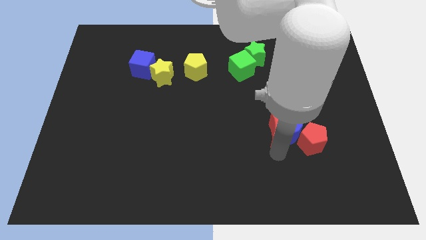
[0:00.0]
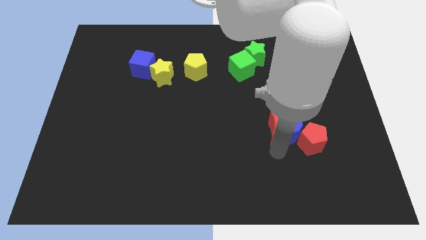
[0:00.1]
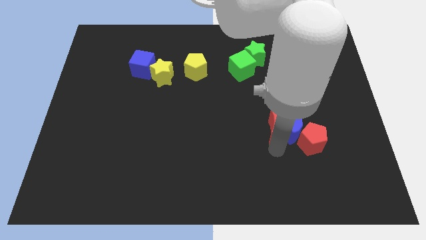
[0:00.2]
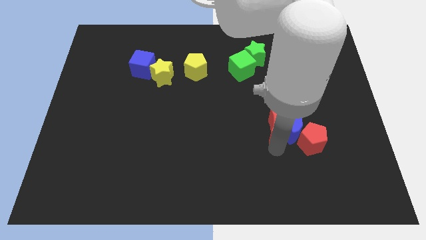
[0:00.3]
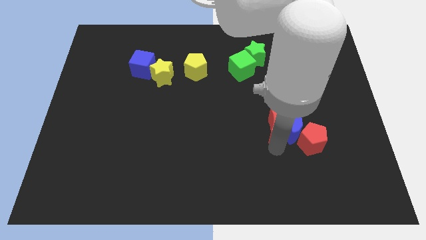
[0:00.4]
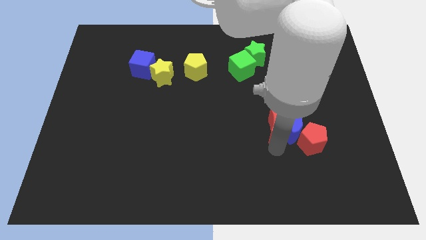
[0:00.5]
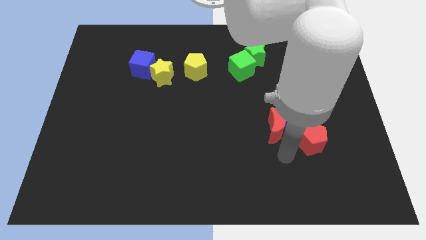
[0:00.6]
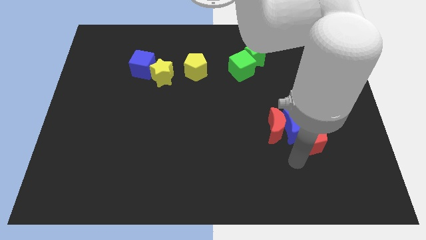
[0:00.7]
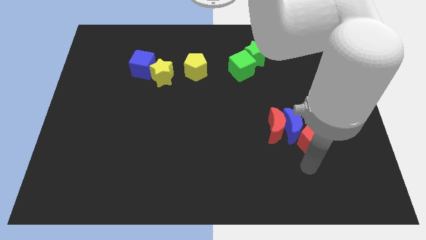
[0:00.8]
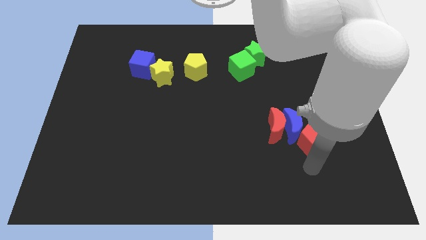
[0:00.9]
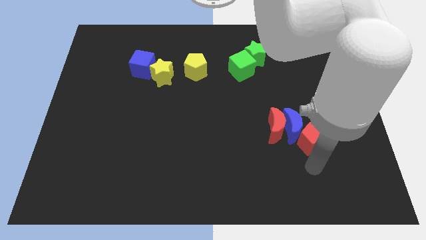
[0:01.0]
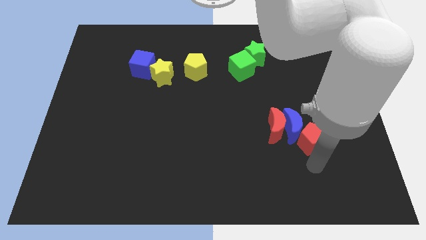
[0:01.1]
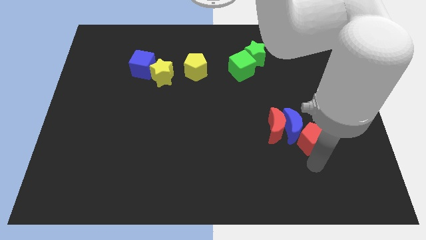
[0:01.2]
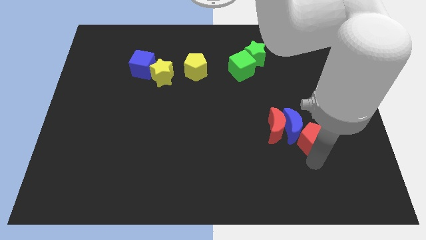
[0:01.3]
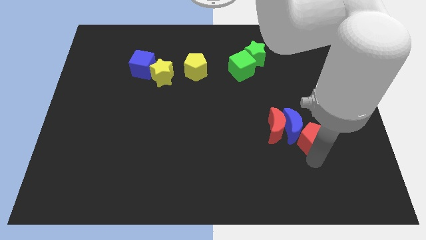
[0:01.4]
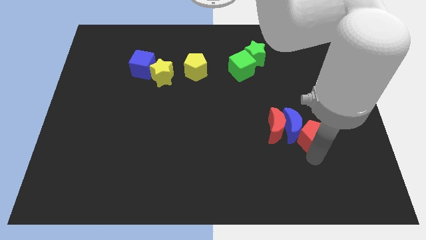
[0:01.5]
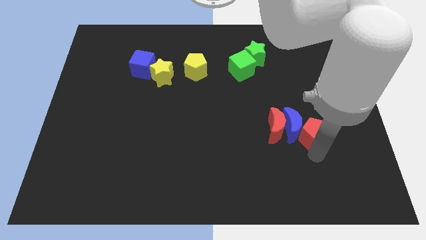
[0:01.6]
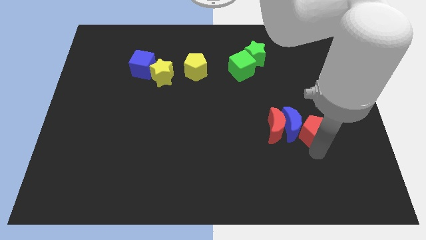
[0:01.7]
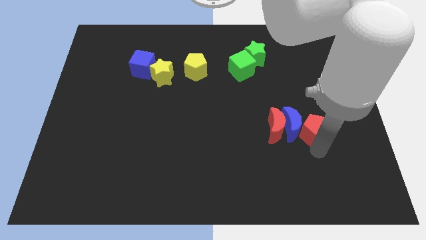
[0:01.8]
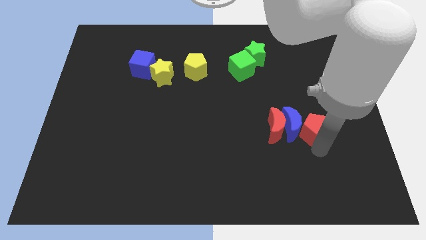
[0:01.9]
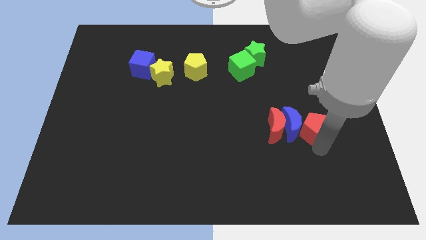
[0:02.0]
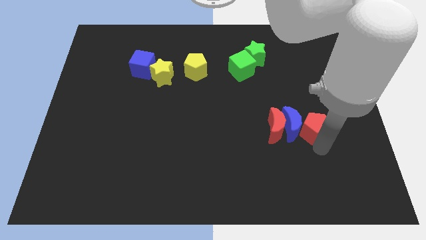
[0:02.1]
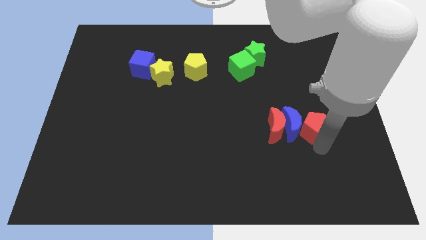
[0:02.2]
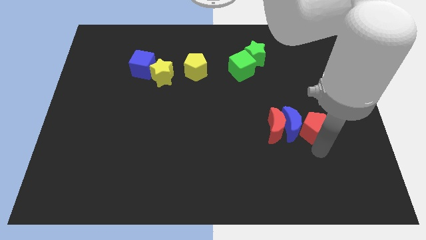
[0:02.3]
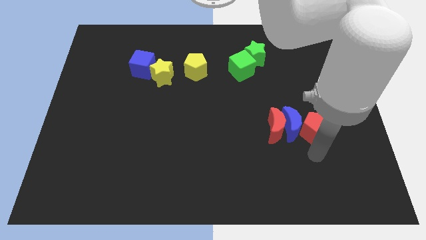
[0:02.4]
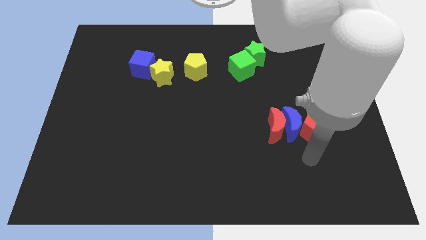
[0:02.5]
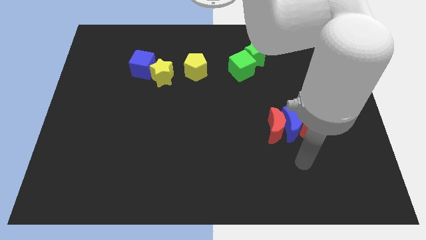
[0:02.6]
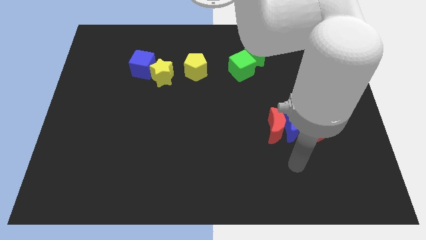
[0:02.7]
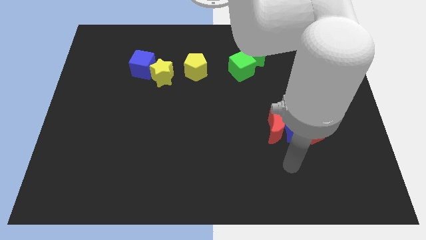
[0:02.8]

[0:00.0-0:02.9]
push the red pentagon right to the blue crescent

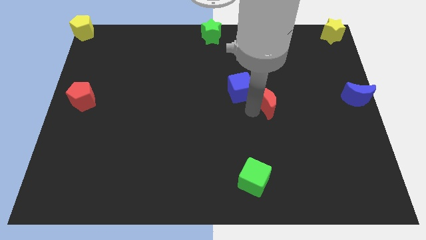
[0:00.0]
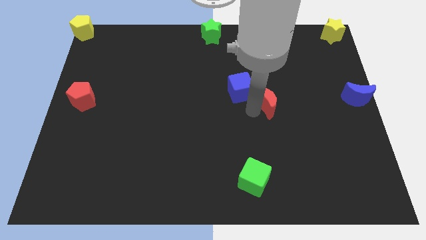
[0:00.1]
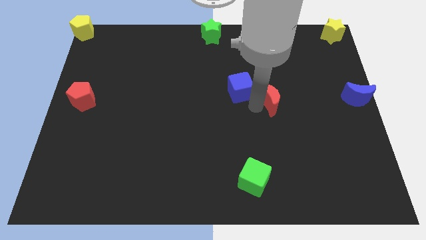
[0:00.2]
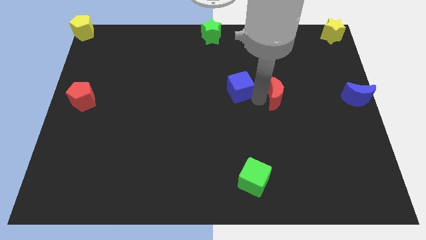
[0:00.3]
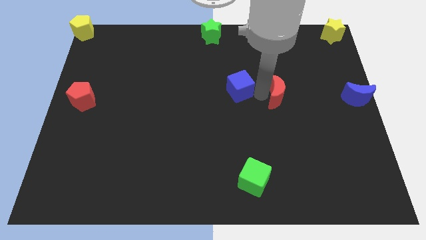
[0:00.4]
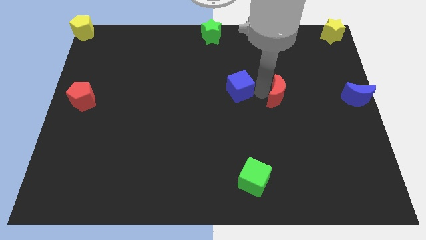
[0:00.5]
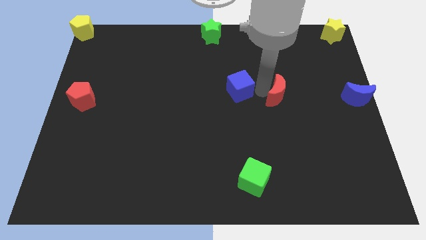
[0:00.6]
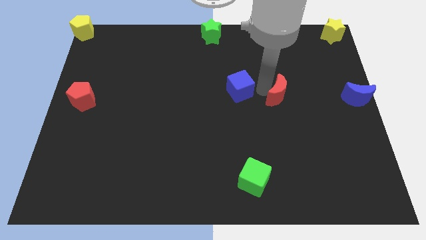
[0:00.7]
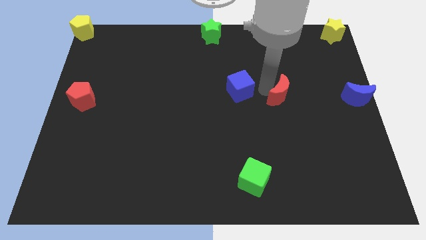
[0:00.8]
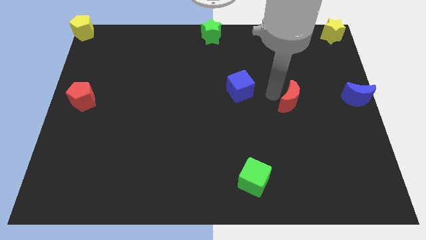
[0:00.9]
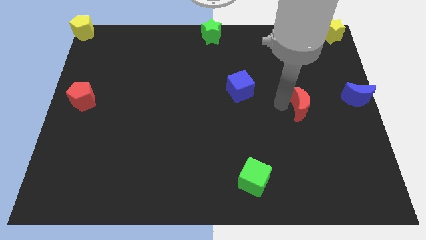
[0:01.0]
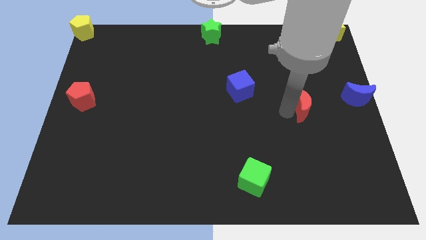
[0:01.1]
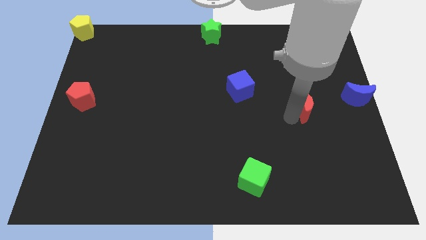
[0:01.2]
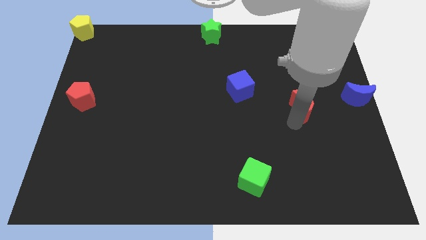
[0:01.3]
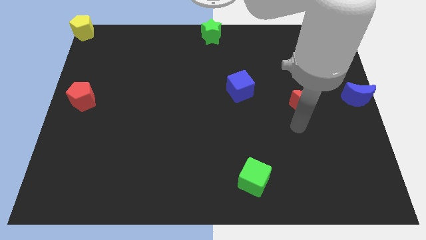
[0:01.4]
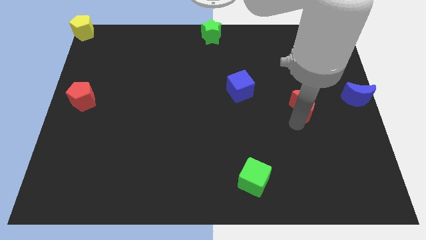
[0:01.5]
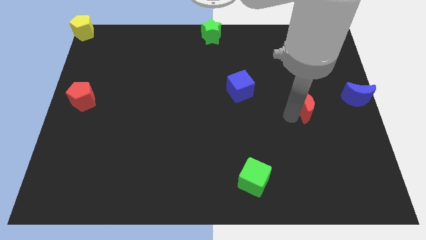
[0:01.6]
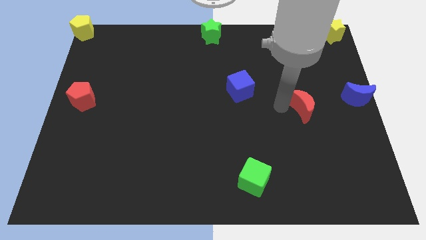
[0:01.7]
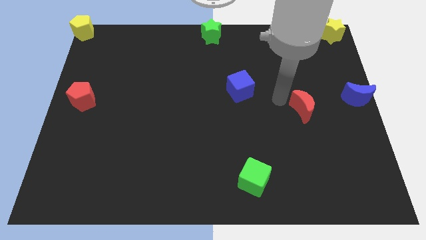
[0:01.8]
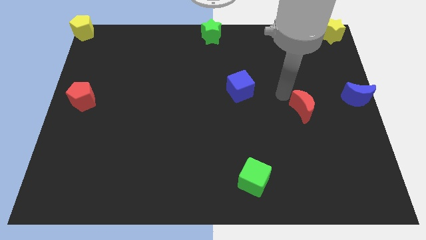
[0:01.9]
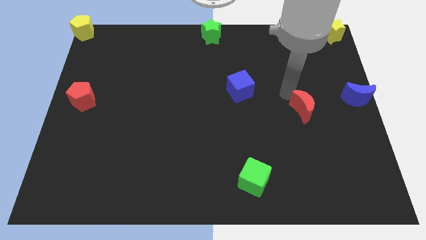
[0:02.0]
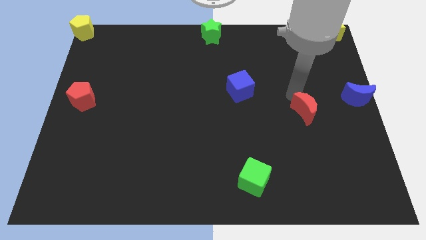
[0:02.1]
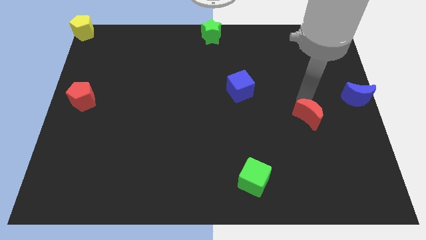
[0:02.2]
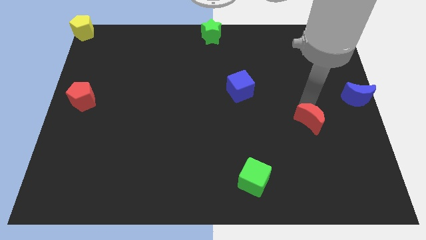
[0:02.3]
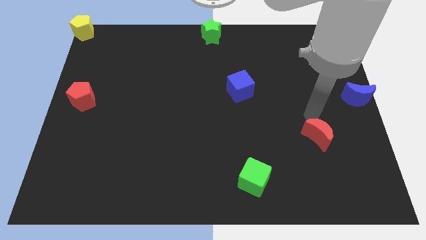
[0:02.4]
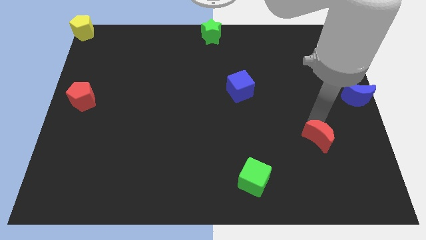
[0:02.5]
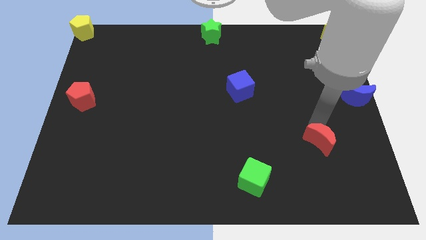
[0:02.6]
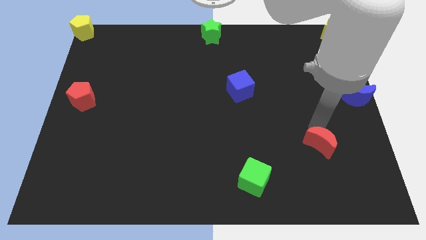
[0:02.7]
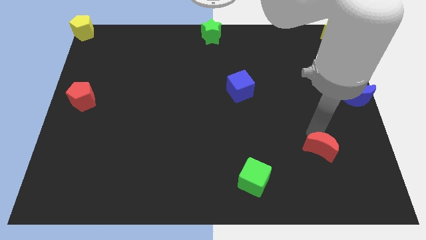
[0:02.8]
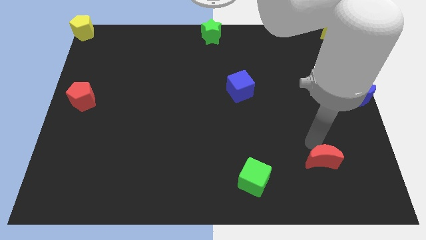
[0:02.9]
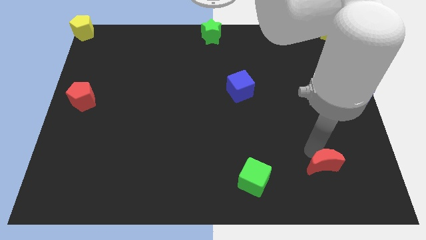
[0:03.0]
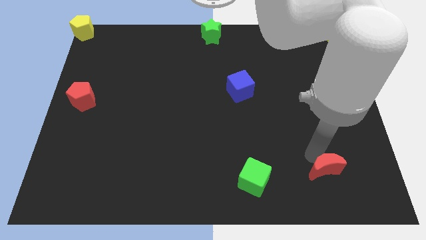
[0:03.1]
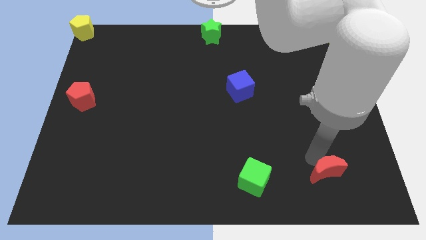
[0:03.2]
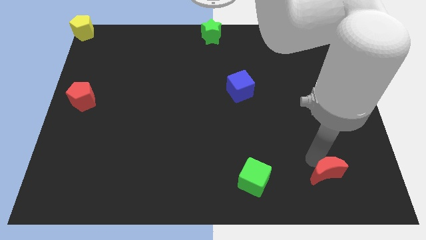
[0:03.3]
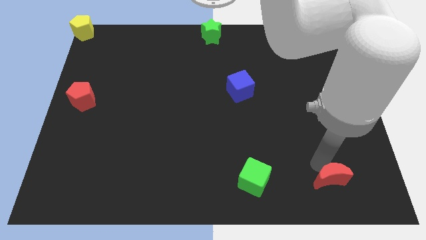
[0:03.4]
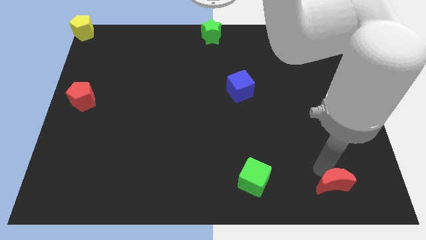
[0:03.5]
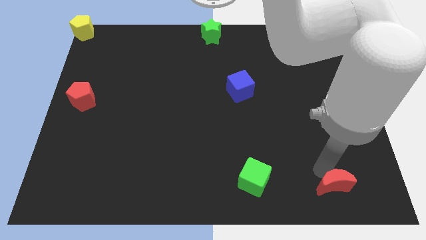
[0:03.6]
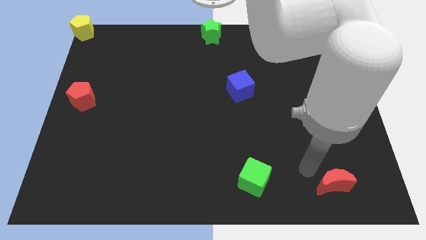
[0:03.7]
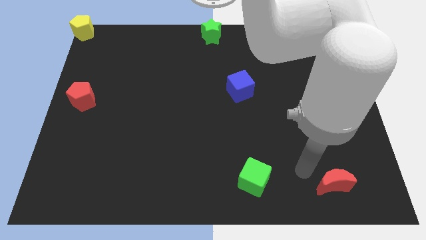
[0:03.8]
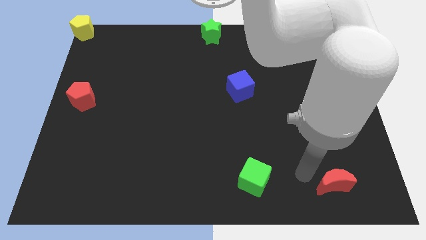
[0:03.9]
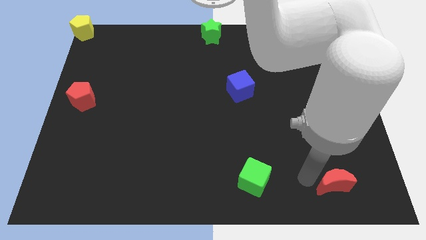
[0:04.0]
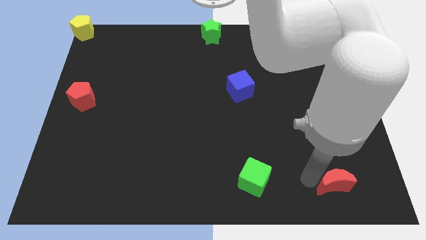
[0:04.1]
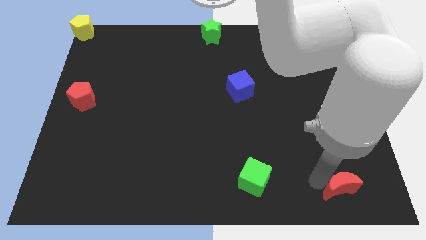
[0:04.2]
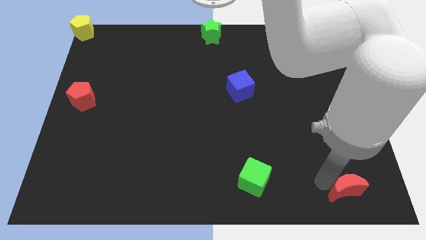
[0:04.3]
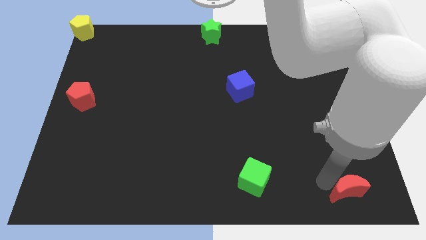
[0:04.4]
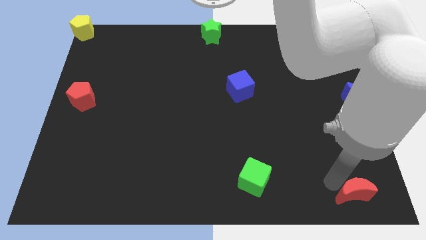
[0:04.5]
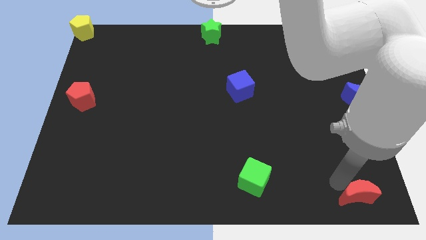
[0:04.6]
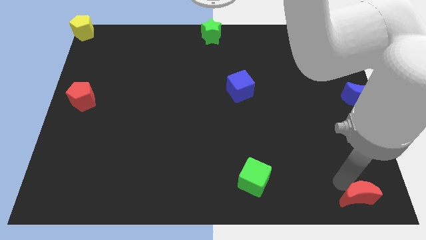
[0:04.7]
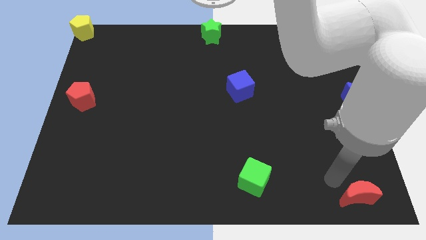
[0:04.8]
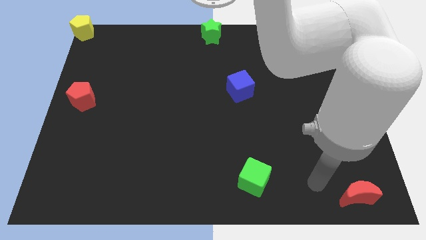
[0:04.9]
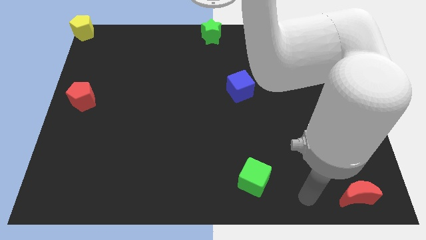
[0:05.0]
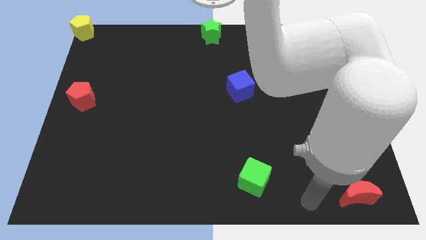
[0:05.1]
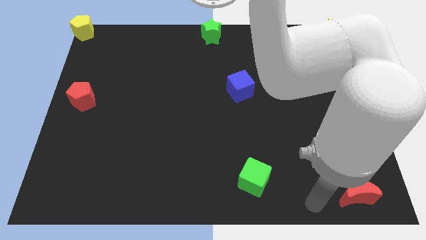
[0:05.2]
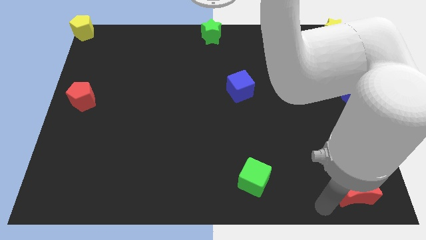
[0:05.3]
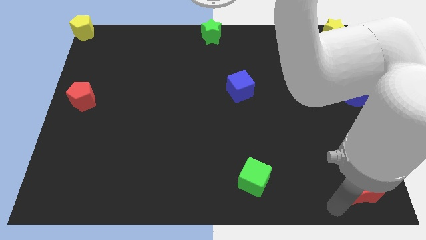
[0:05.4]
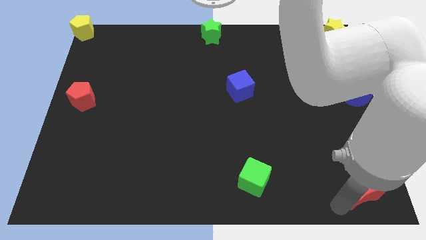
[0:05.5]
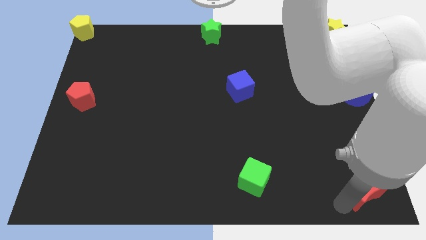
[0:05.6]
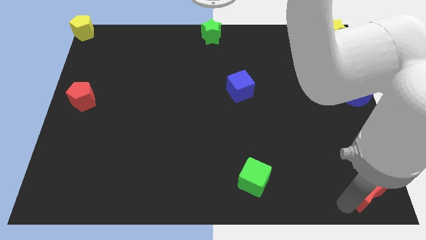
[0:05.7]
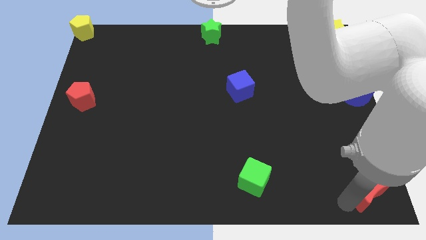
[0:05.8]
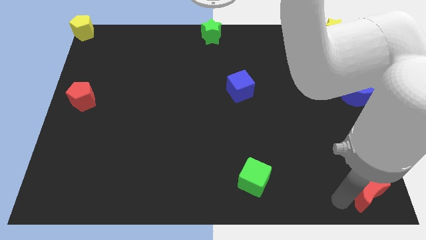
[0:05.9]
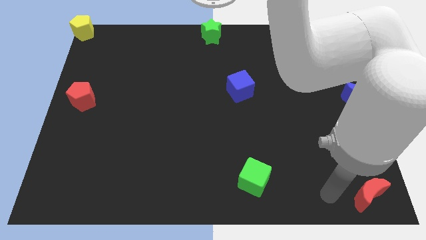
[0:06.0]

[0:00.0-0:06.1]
put the red moon at the bottom right corner of the board
